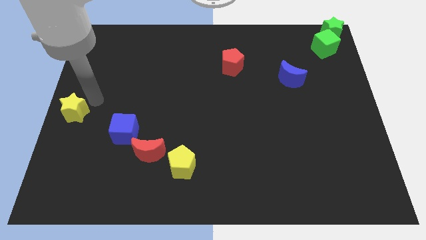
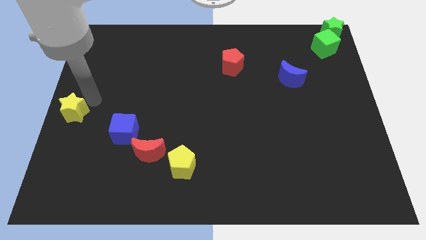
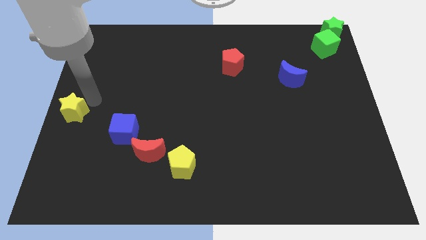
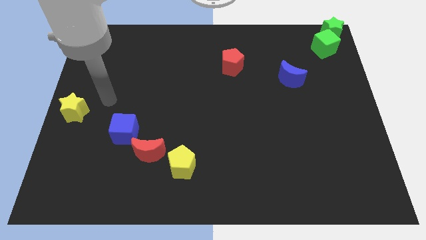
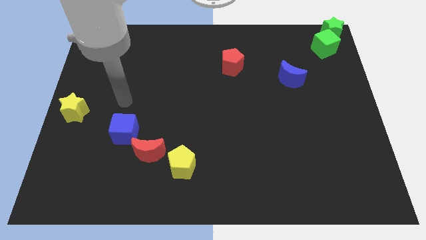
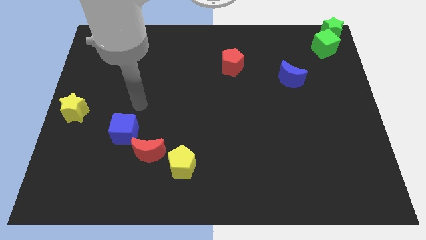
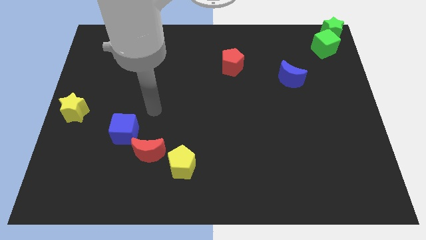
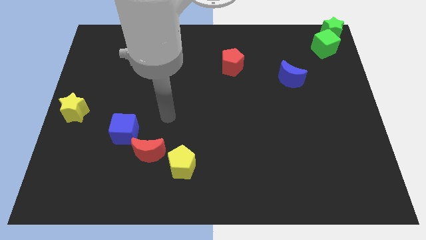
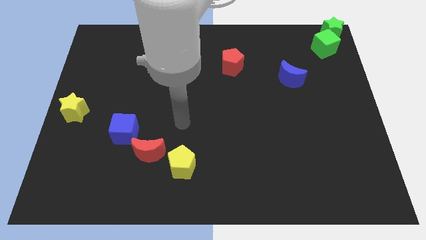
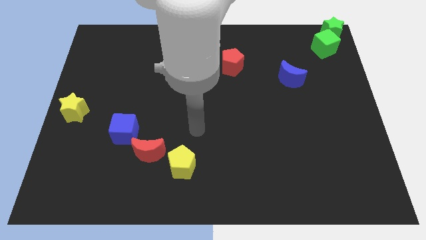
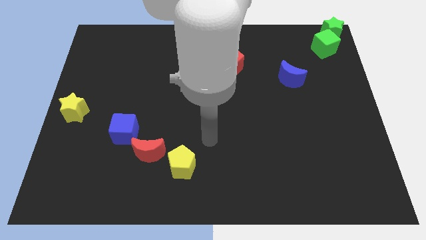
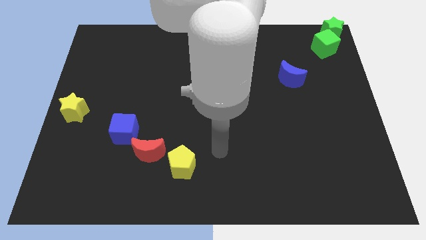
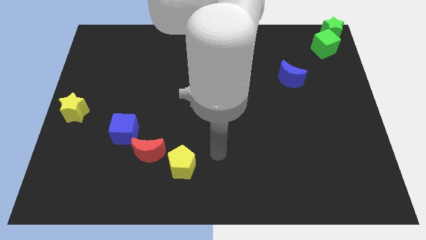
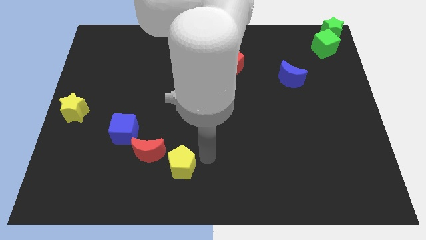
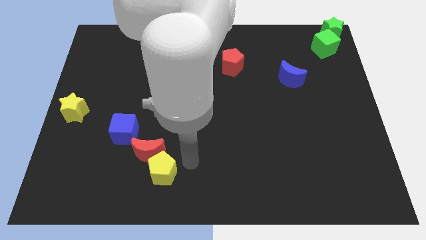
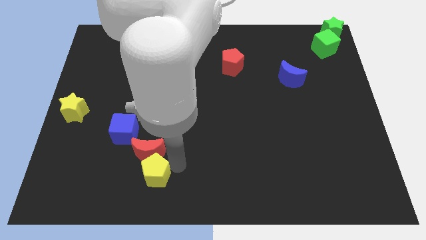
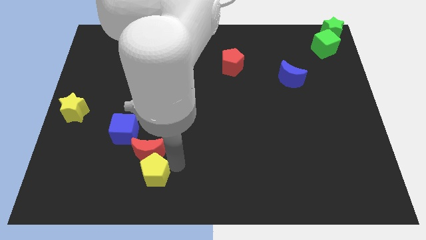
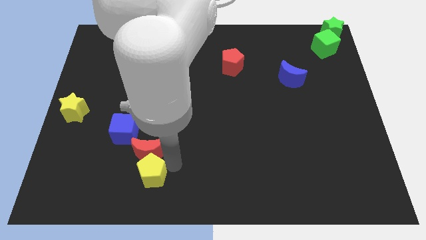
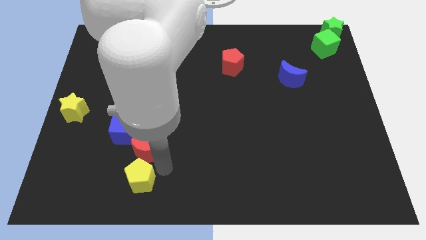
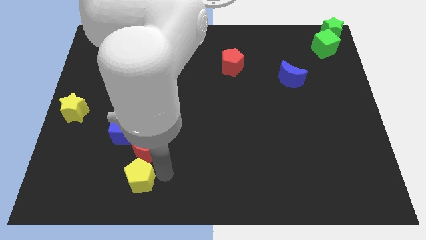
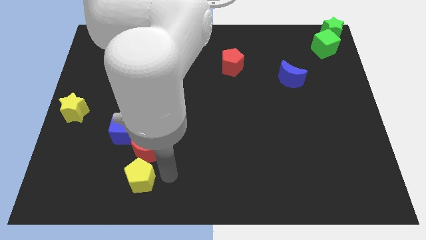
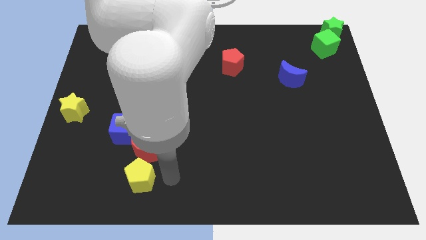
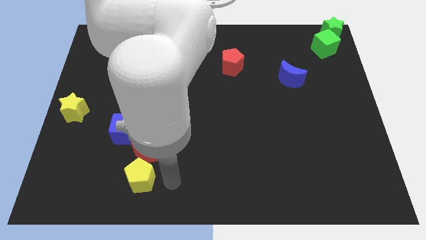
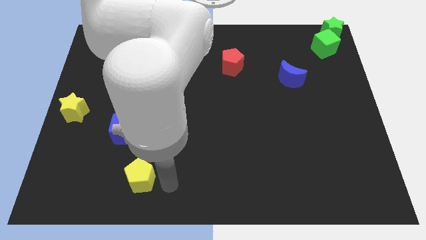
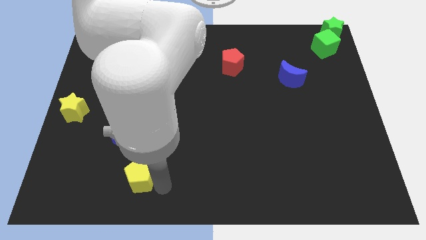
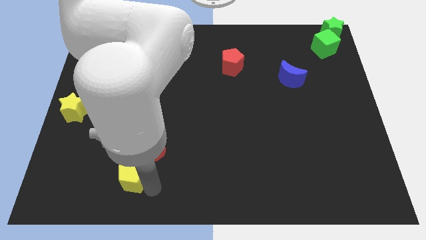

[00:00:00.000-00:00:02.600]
push the yellow pentagon below to the red crescent

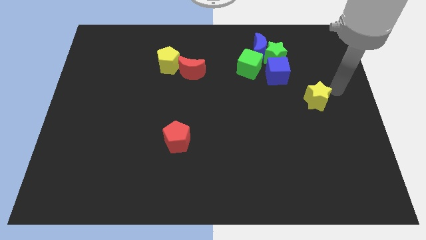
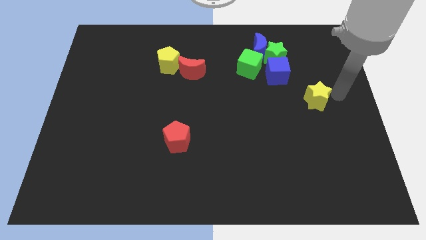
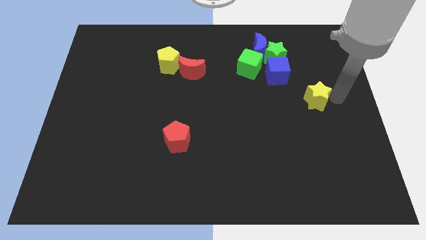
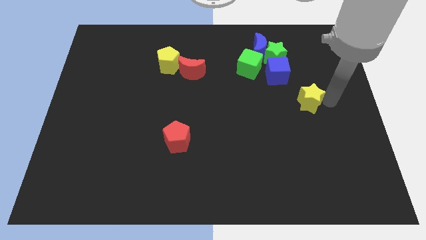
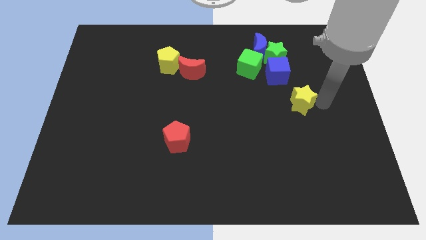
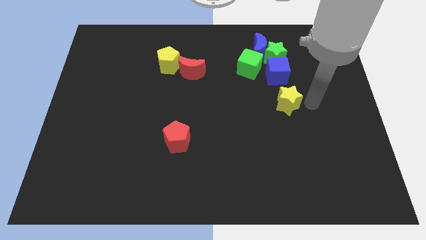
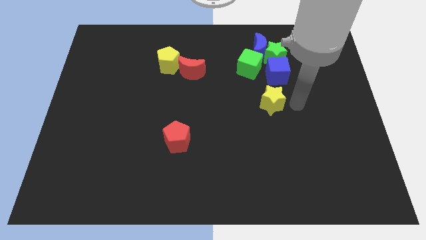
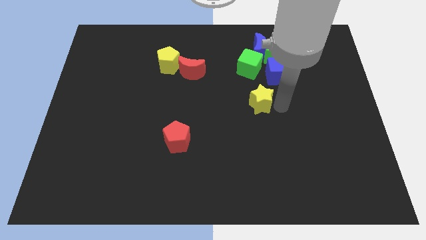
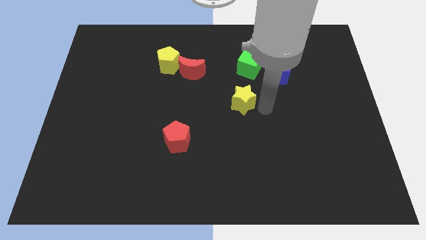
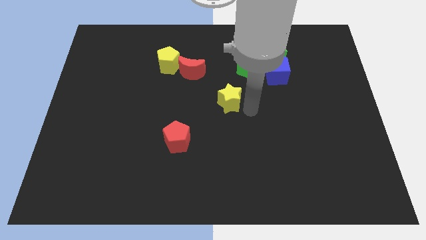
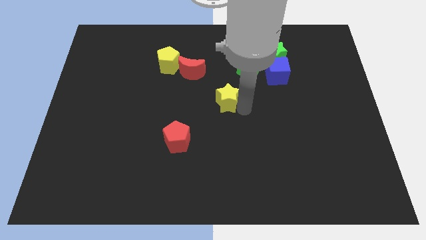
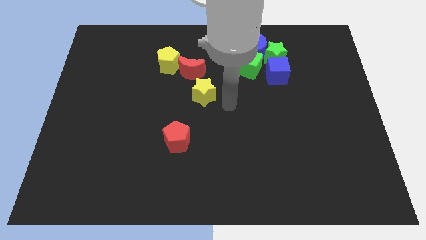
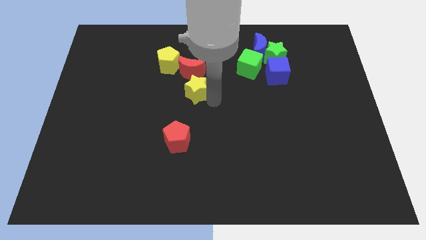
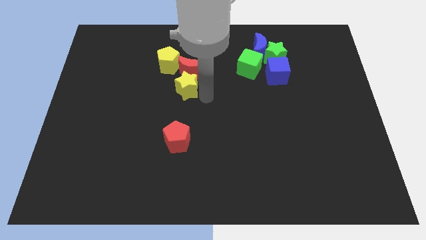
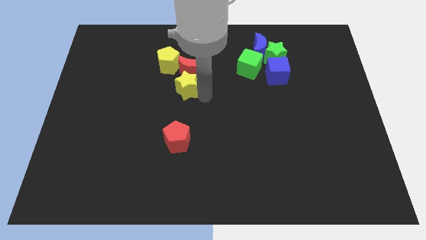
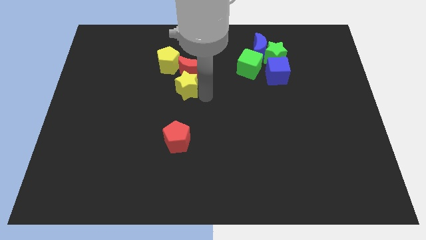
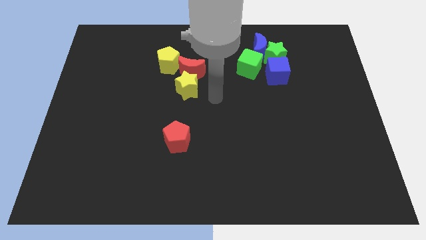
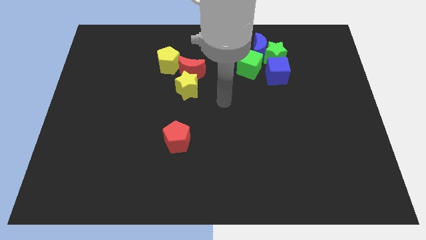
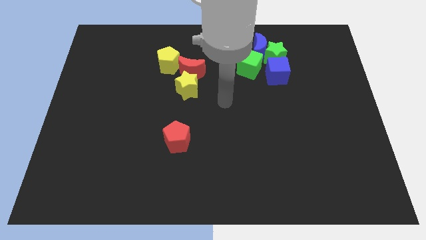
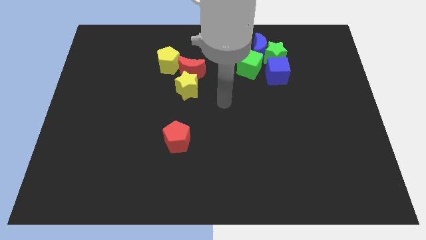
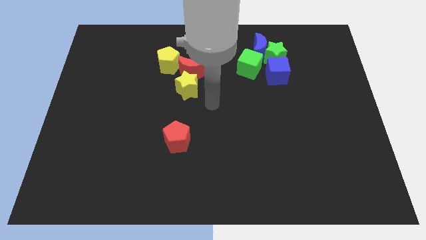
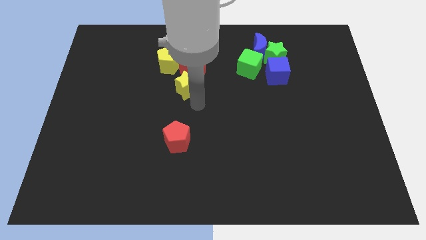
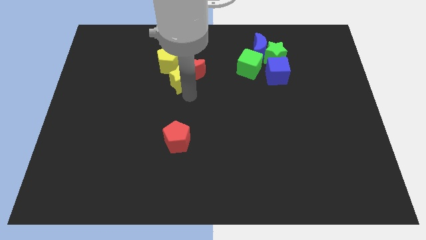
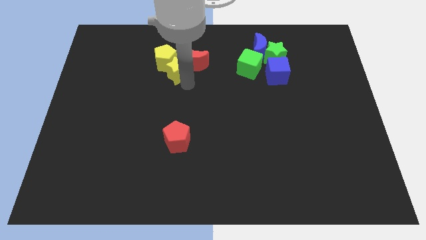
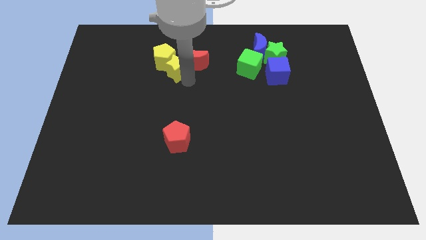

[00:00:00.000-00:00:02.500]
push the yellow star into the yellow pentagon and red crescent

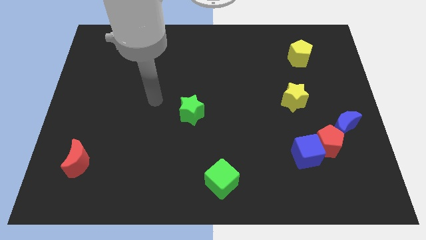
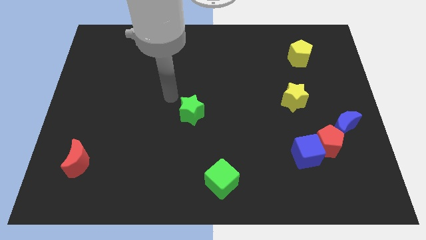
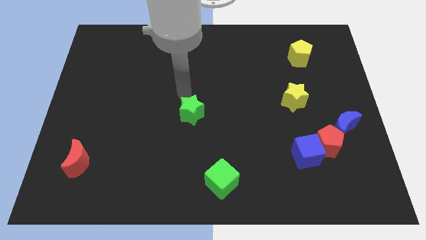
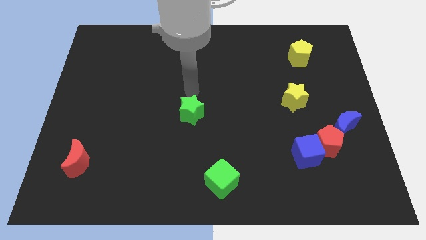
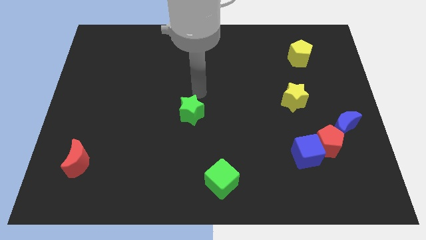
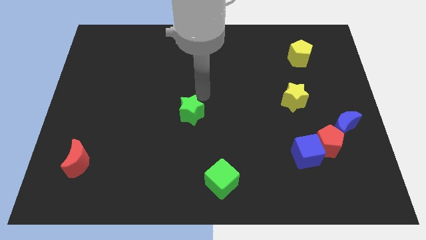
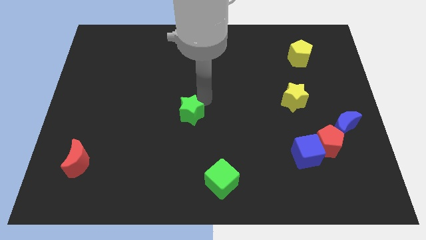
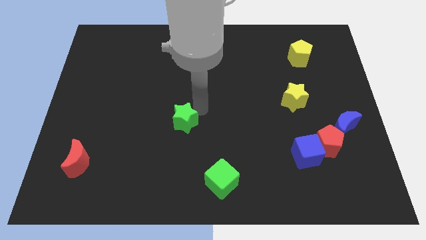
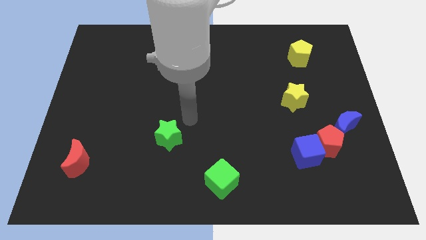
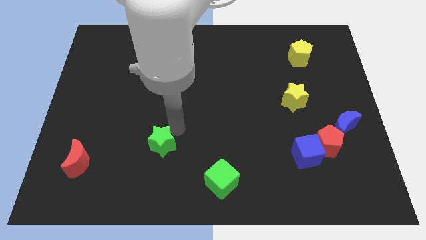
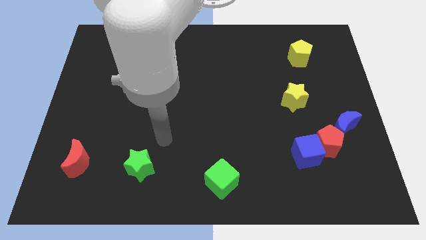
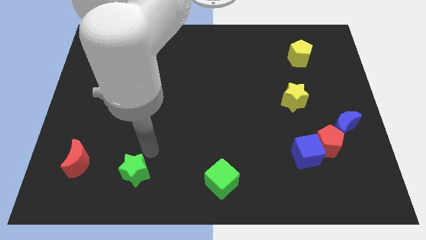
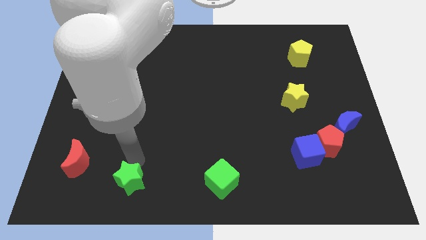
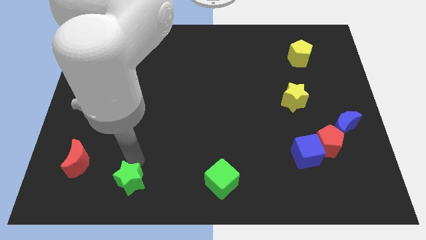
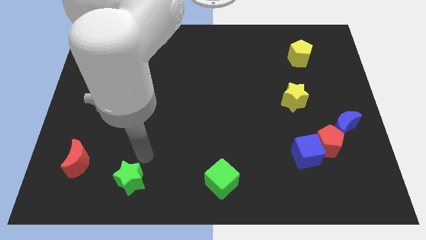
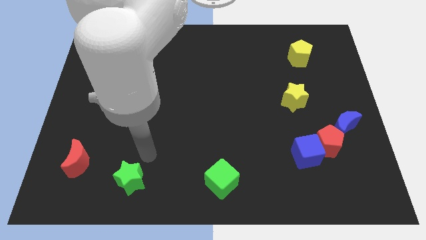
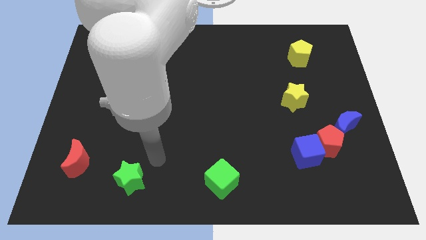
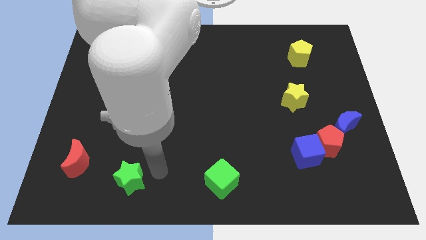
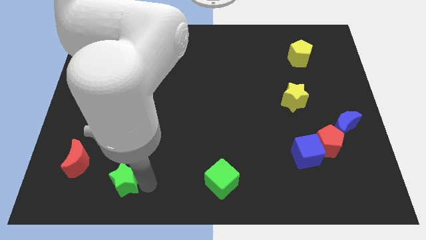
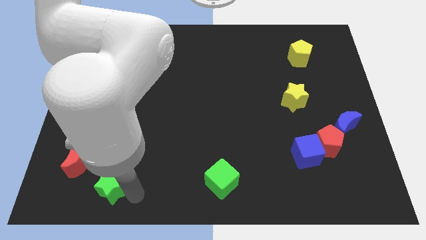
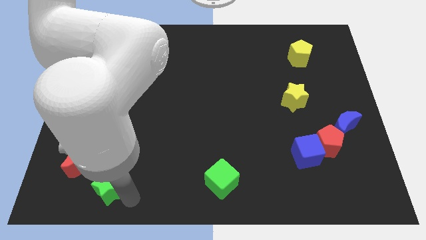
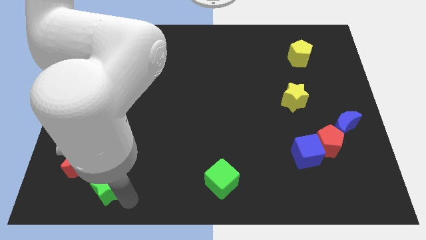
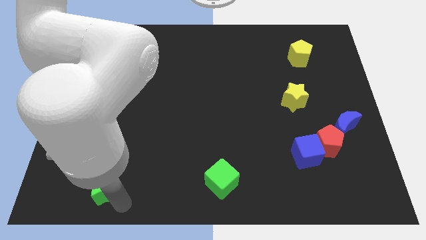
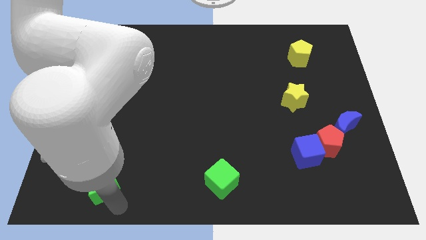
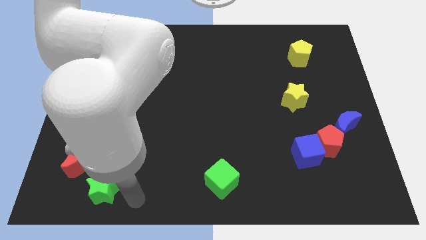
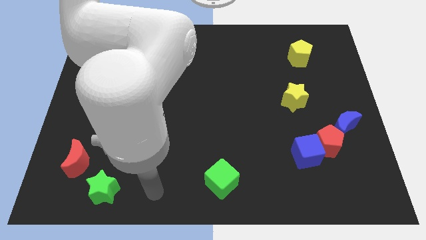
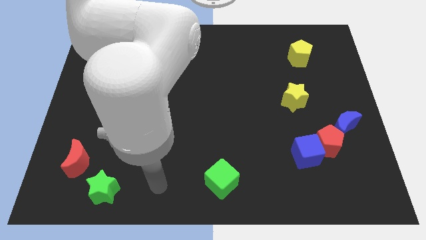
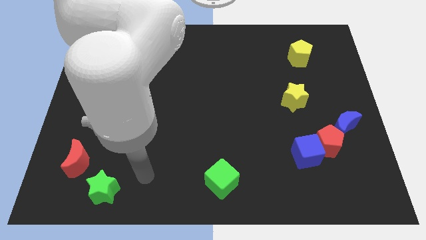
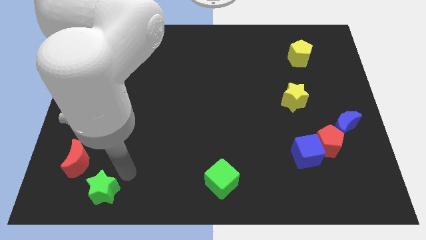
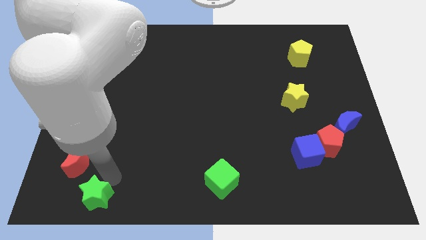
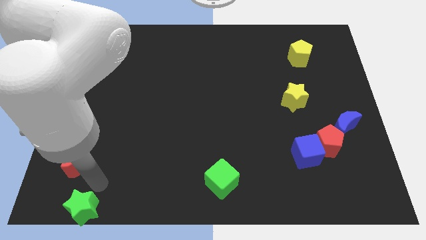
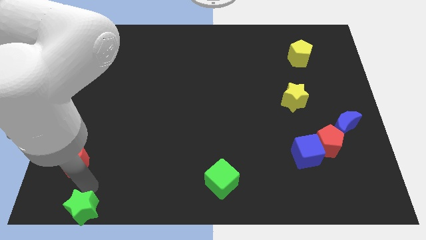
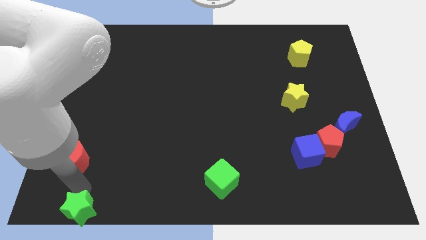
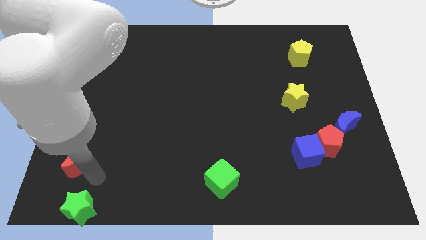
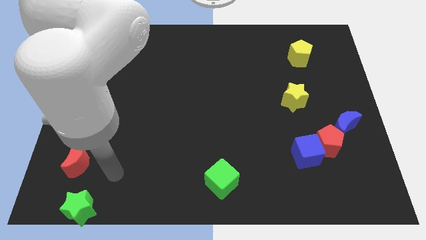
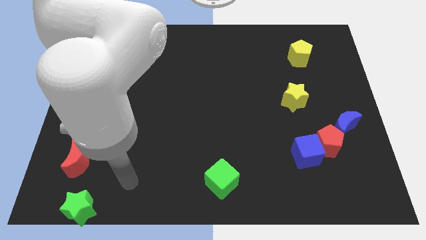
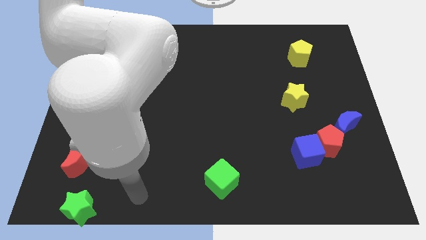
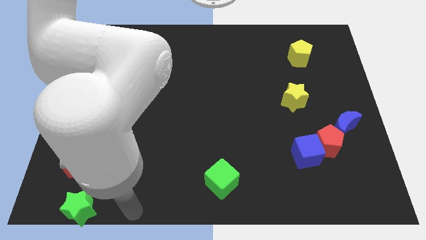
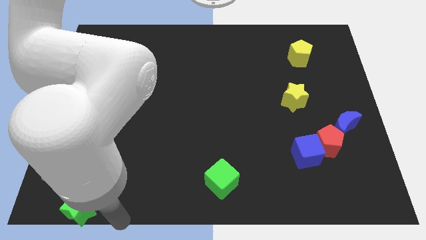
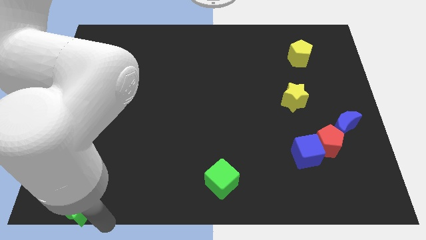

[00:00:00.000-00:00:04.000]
place the green star below the red moon
